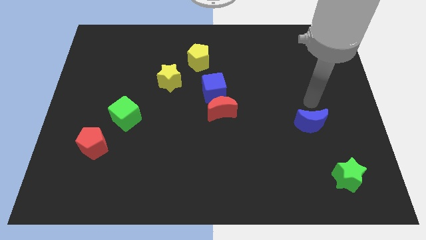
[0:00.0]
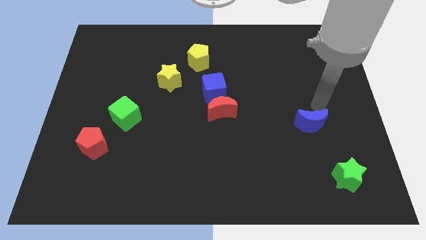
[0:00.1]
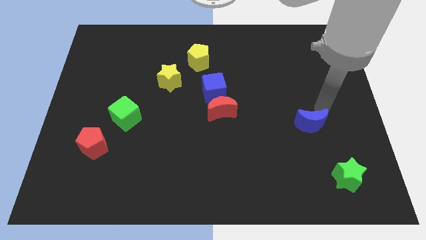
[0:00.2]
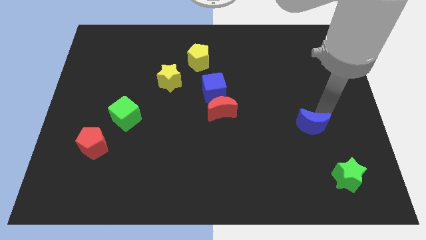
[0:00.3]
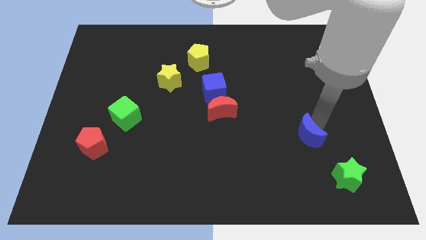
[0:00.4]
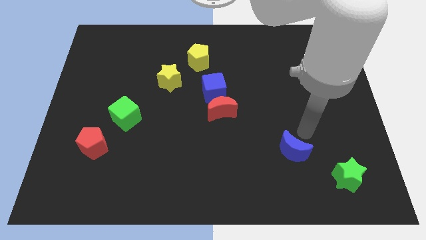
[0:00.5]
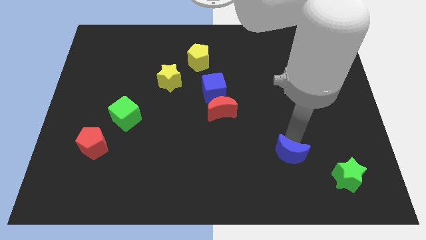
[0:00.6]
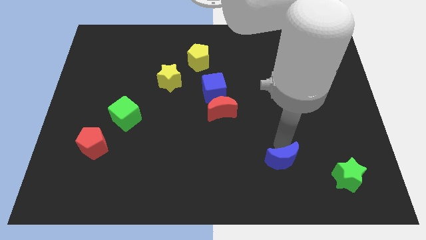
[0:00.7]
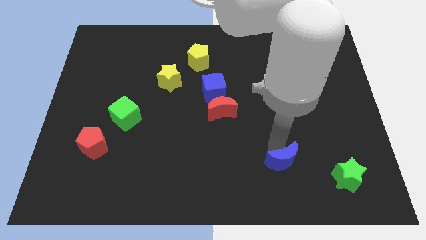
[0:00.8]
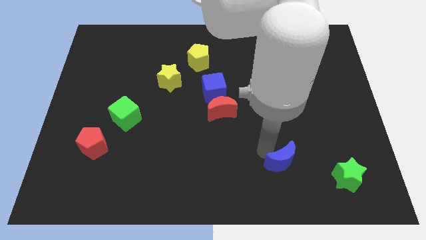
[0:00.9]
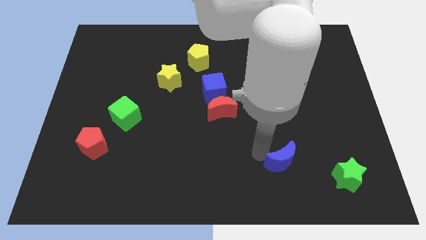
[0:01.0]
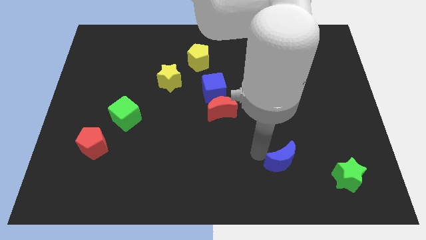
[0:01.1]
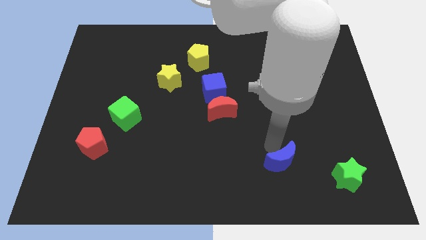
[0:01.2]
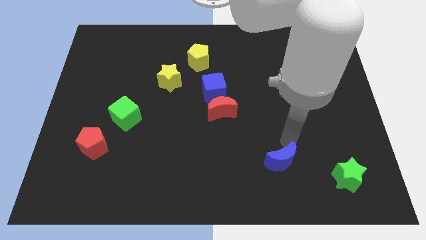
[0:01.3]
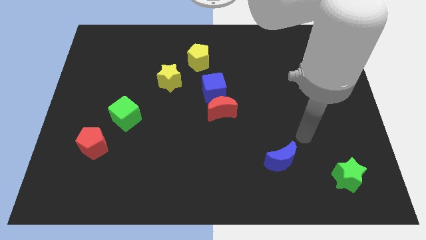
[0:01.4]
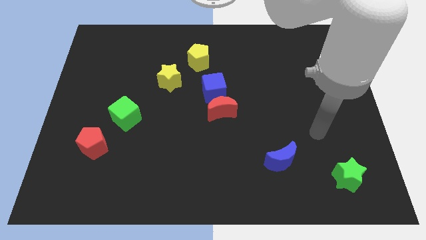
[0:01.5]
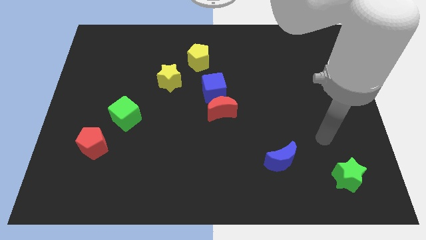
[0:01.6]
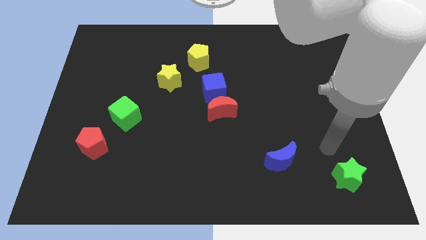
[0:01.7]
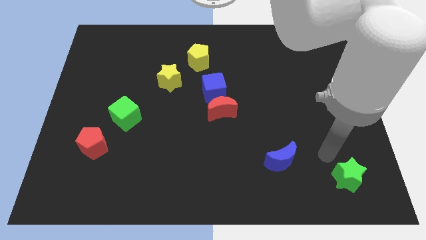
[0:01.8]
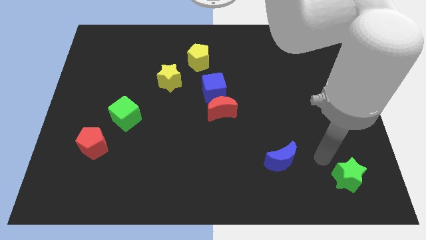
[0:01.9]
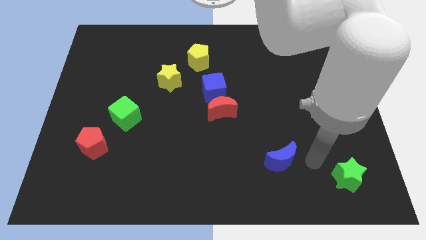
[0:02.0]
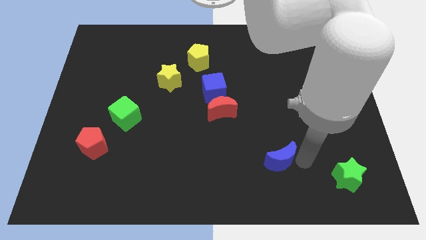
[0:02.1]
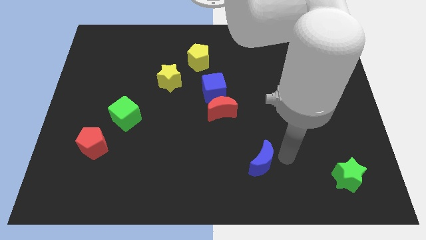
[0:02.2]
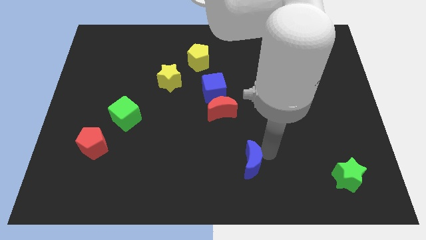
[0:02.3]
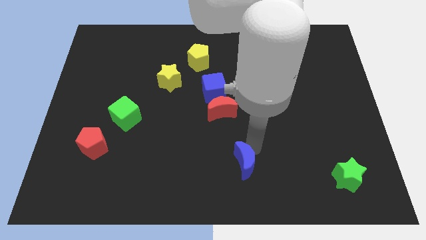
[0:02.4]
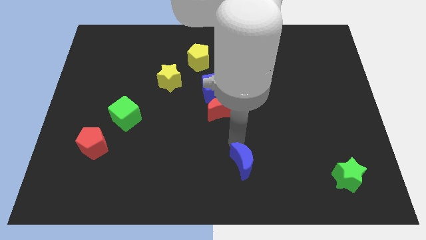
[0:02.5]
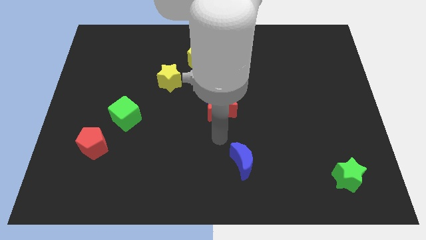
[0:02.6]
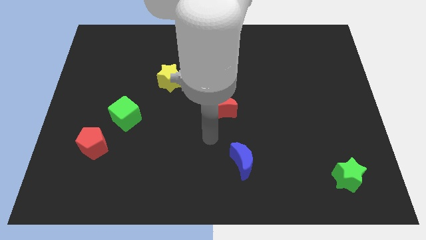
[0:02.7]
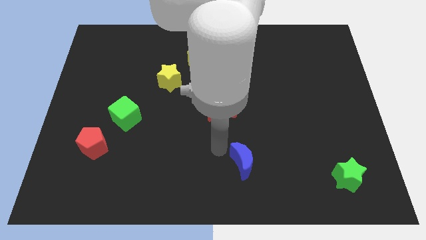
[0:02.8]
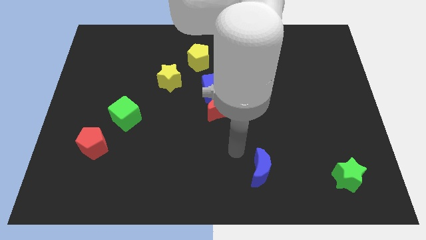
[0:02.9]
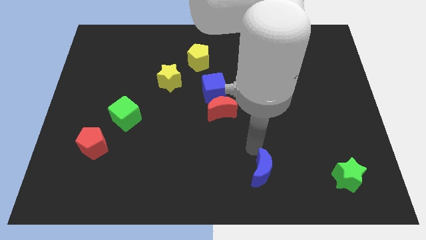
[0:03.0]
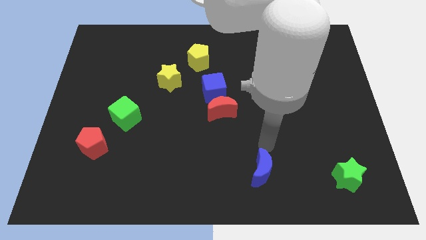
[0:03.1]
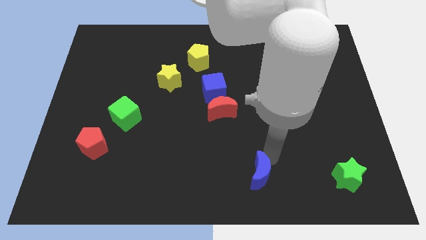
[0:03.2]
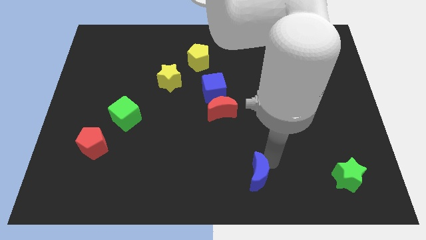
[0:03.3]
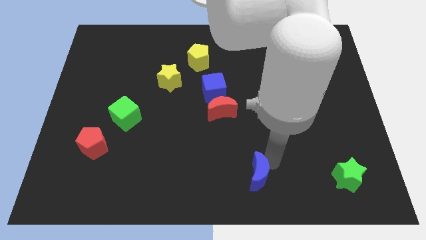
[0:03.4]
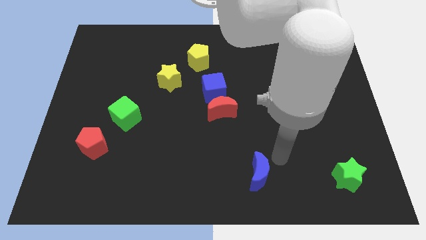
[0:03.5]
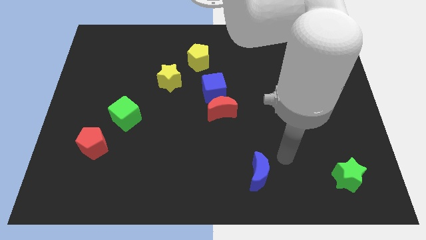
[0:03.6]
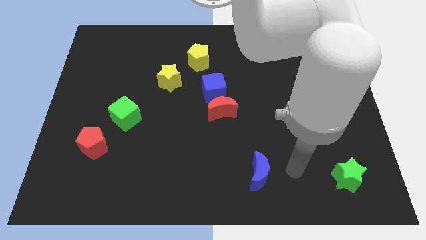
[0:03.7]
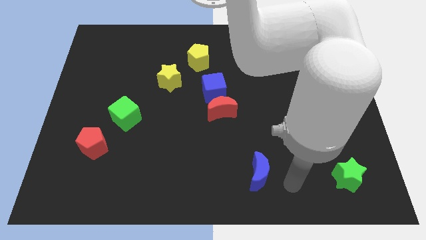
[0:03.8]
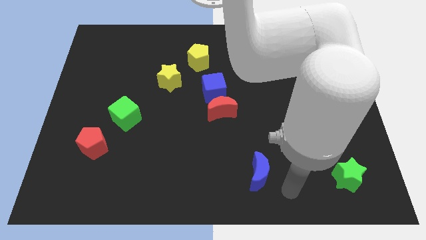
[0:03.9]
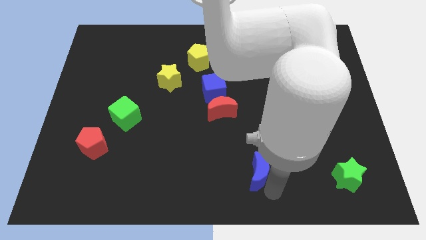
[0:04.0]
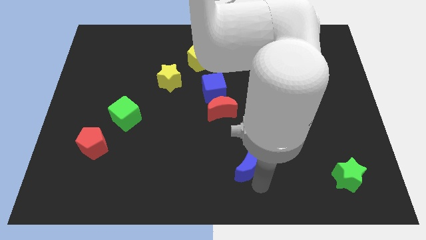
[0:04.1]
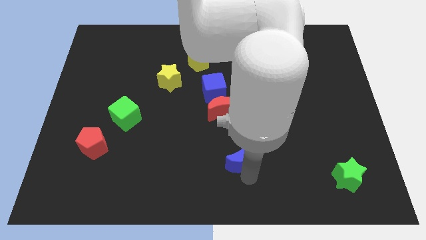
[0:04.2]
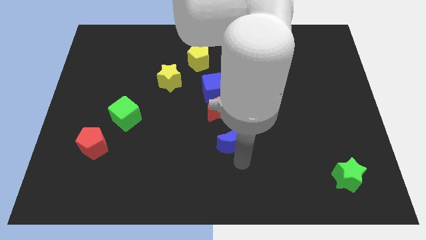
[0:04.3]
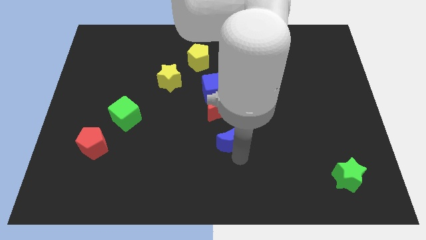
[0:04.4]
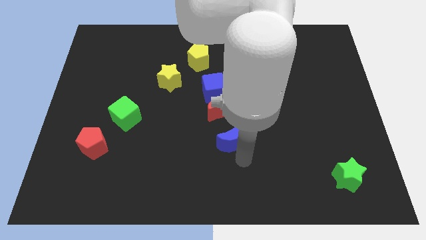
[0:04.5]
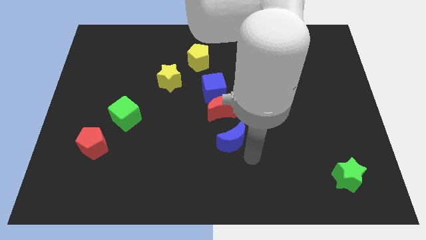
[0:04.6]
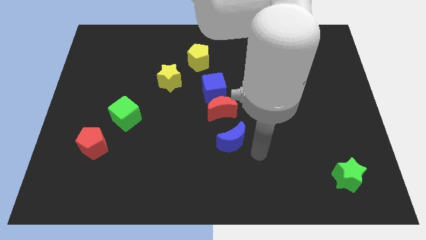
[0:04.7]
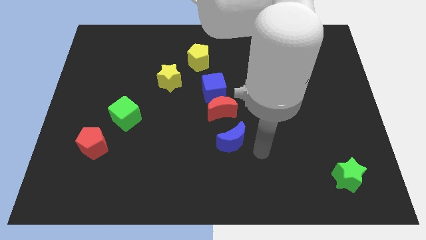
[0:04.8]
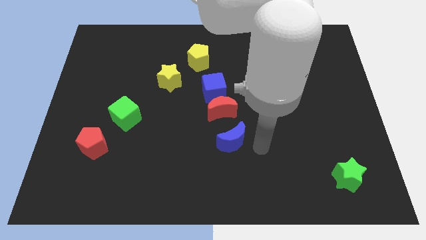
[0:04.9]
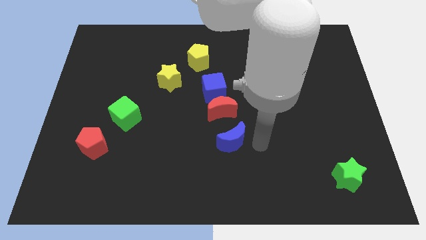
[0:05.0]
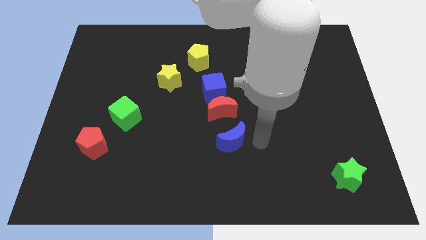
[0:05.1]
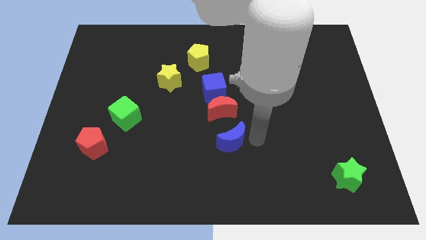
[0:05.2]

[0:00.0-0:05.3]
push the blue moon towards the red moon

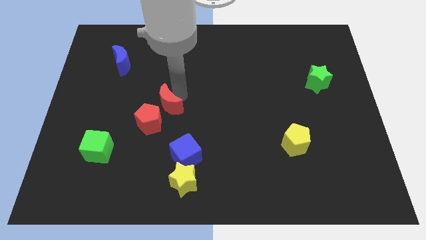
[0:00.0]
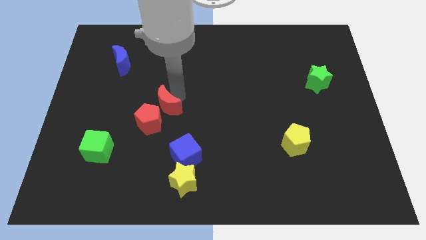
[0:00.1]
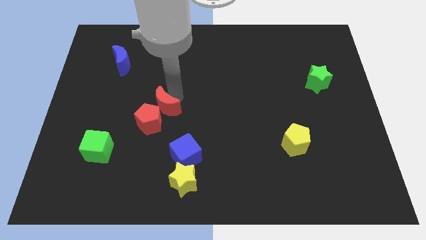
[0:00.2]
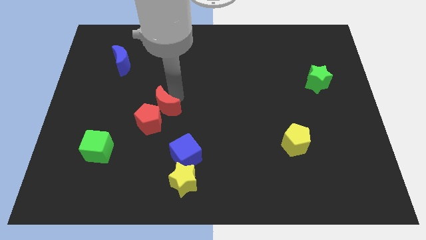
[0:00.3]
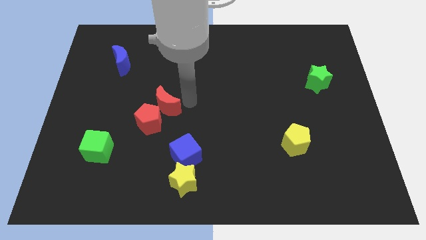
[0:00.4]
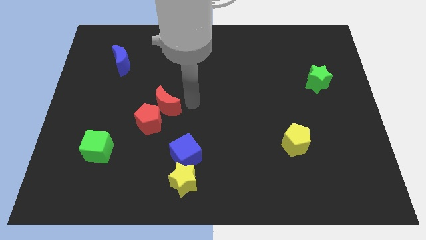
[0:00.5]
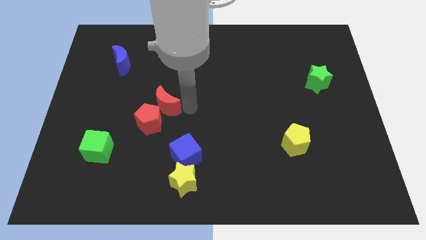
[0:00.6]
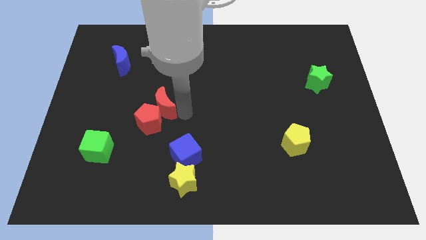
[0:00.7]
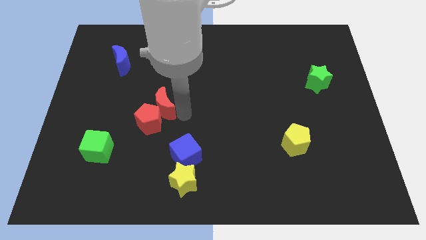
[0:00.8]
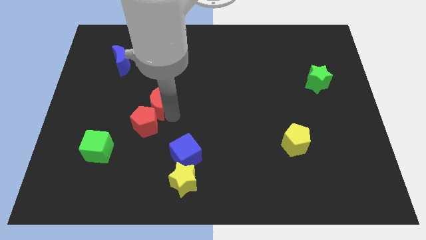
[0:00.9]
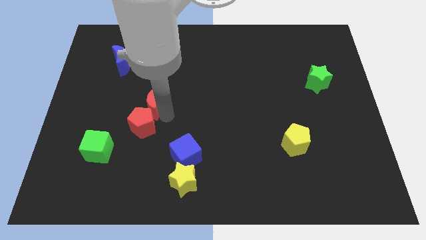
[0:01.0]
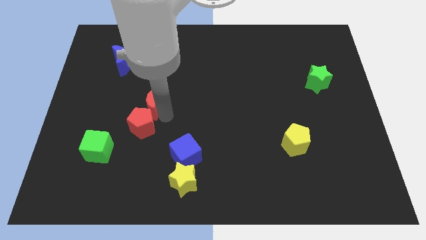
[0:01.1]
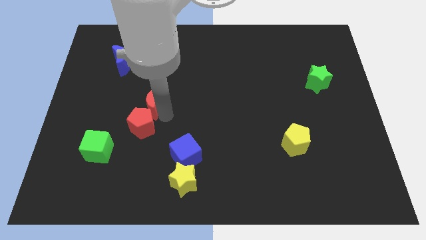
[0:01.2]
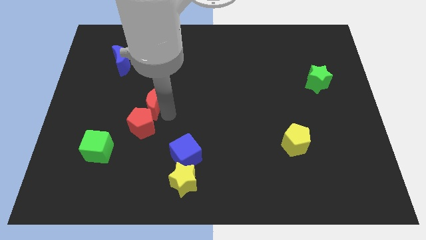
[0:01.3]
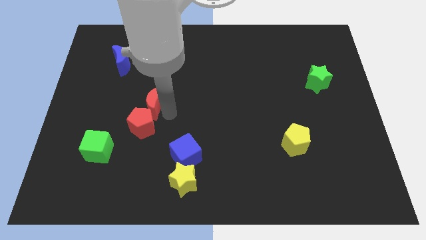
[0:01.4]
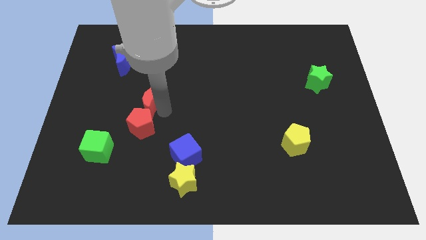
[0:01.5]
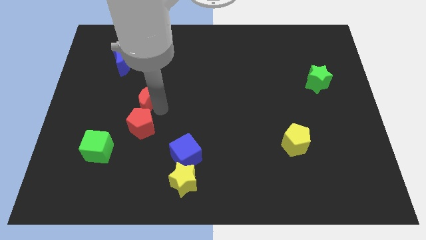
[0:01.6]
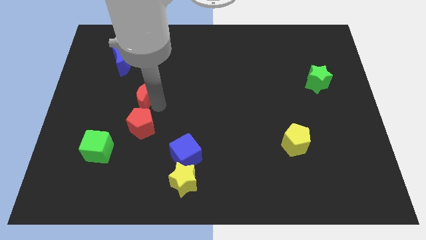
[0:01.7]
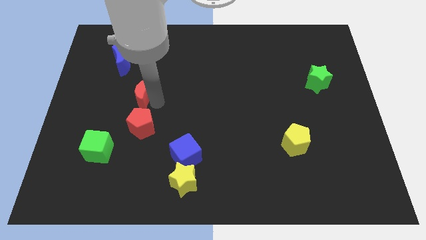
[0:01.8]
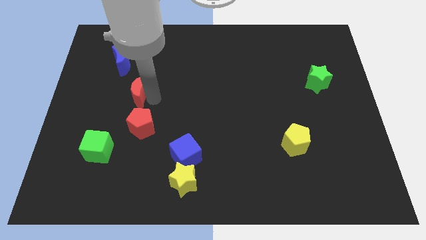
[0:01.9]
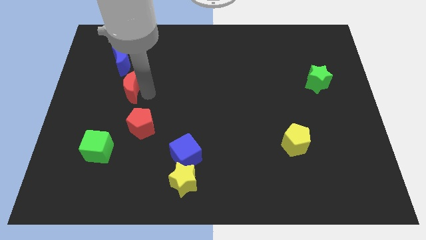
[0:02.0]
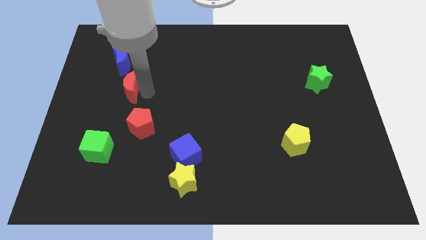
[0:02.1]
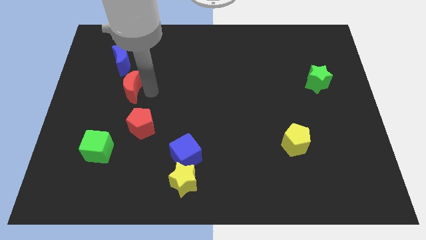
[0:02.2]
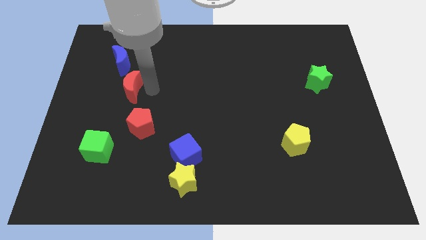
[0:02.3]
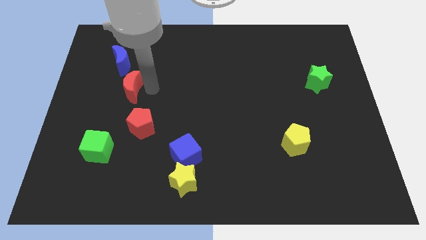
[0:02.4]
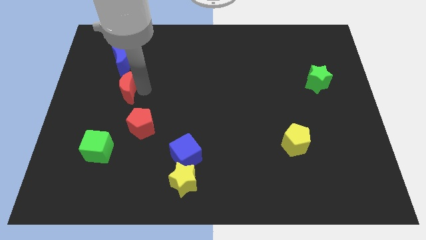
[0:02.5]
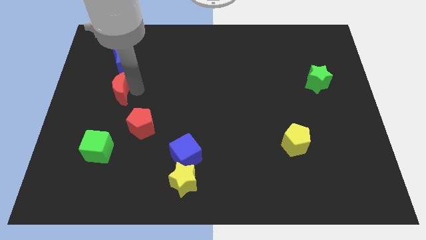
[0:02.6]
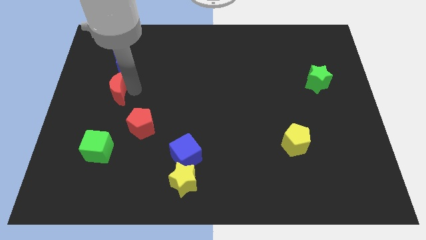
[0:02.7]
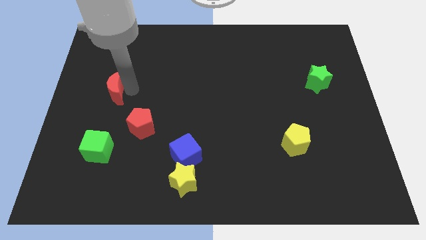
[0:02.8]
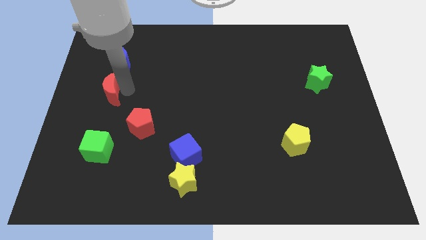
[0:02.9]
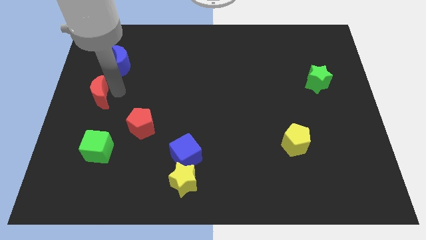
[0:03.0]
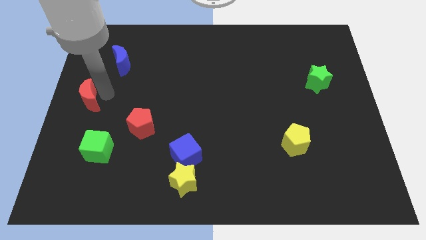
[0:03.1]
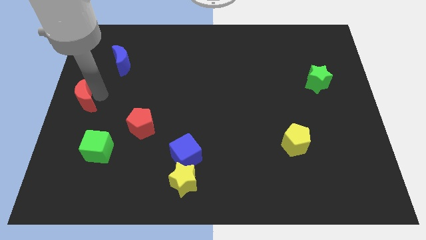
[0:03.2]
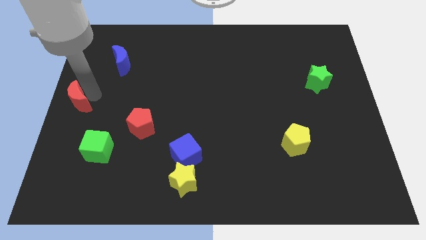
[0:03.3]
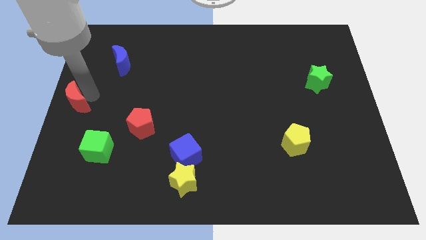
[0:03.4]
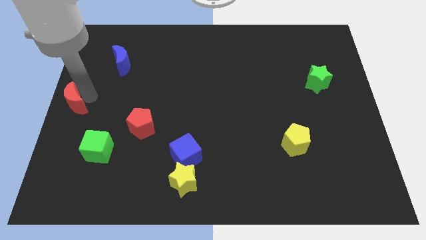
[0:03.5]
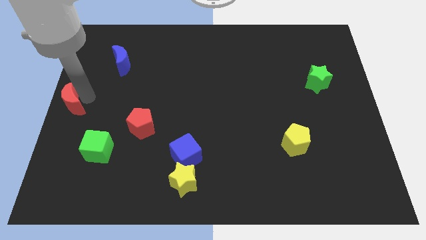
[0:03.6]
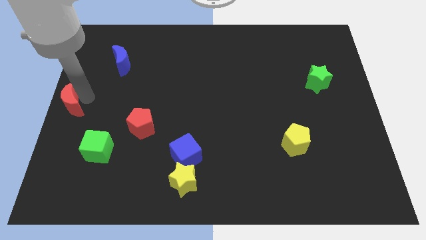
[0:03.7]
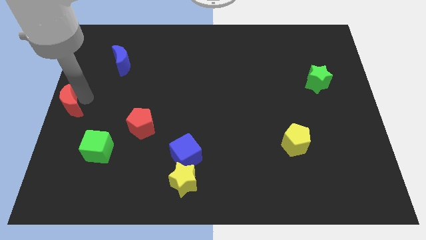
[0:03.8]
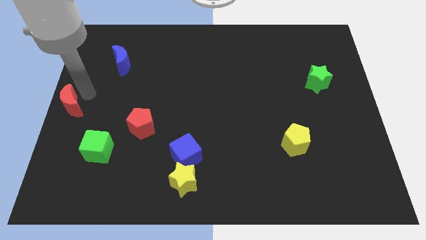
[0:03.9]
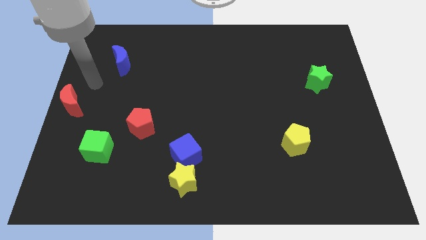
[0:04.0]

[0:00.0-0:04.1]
push red moon to the center left
